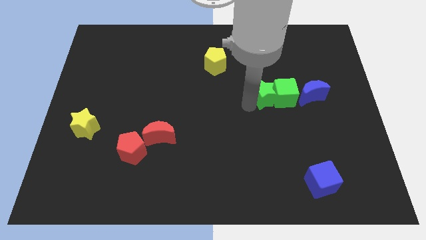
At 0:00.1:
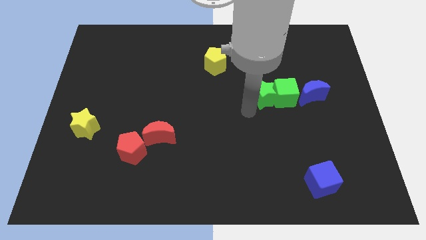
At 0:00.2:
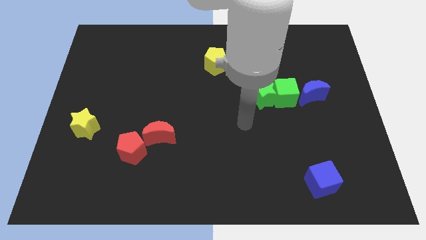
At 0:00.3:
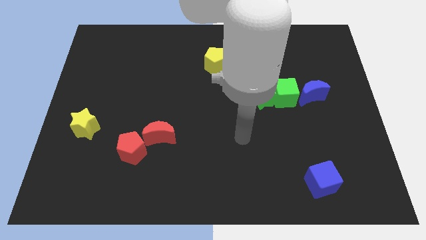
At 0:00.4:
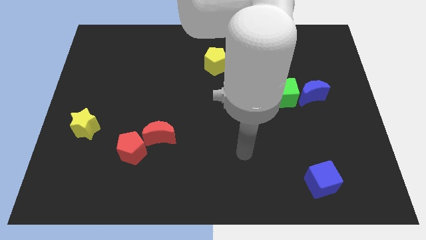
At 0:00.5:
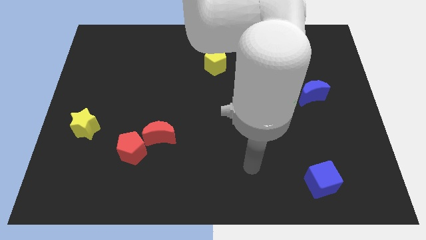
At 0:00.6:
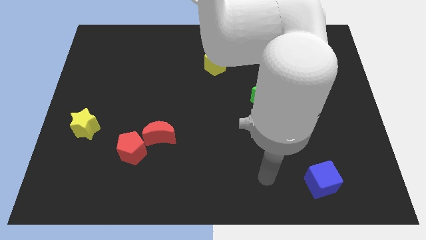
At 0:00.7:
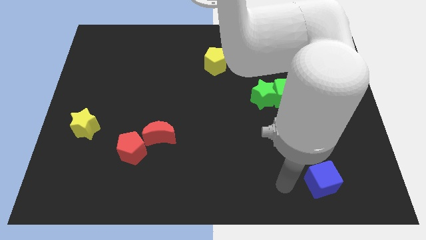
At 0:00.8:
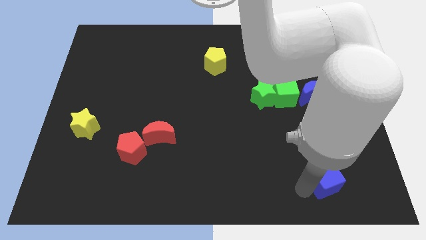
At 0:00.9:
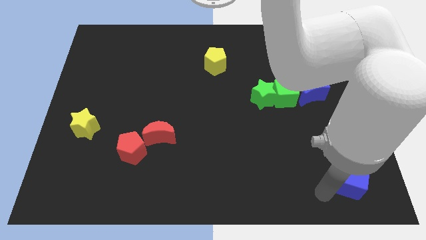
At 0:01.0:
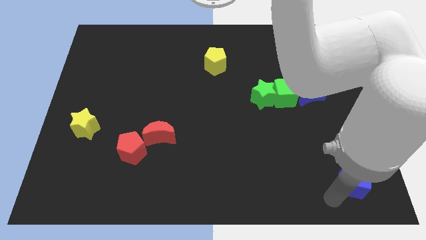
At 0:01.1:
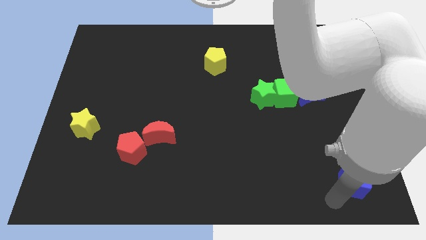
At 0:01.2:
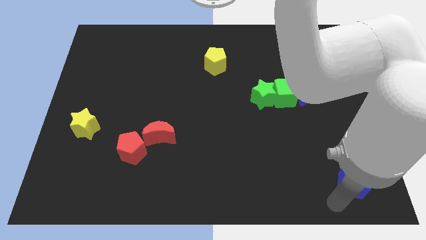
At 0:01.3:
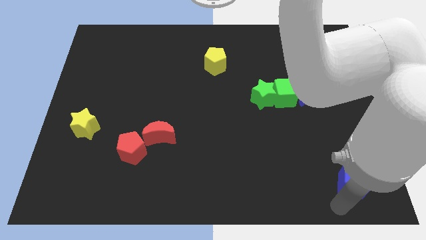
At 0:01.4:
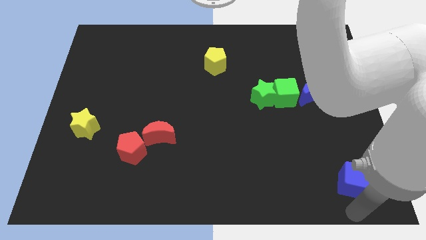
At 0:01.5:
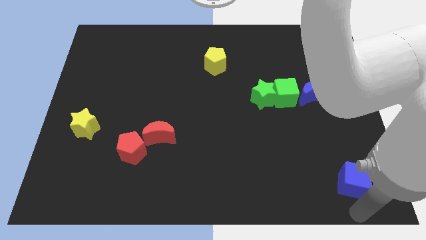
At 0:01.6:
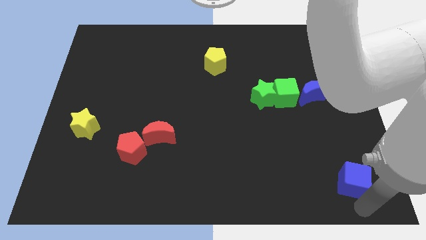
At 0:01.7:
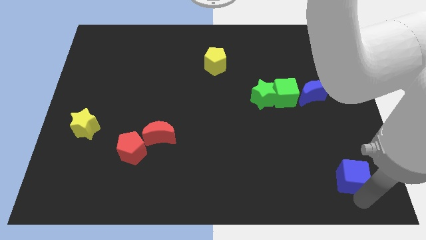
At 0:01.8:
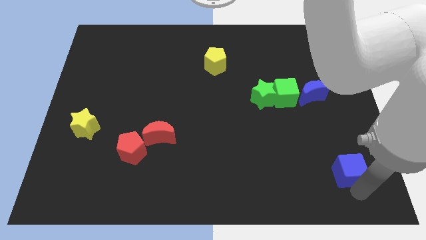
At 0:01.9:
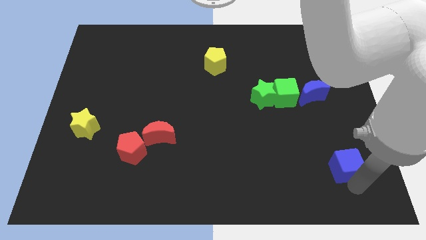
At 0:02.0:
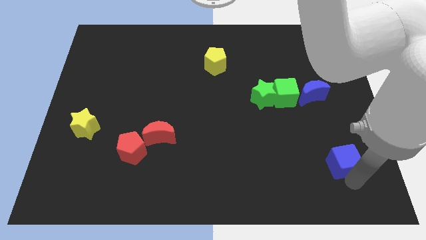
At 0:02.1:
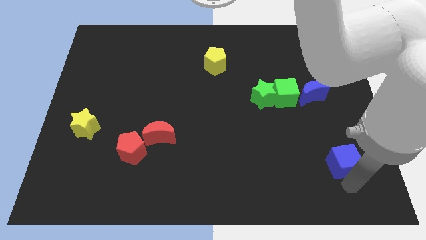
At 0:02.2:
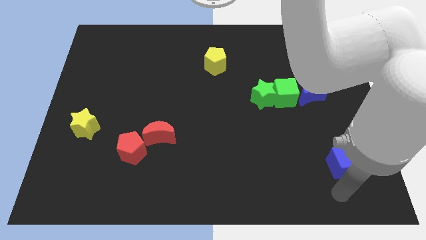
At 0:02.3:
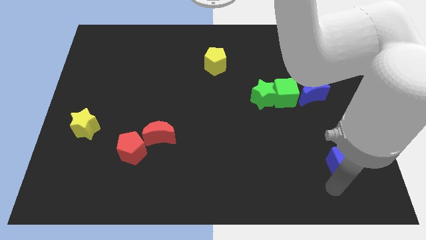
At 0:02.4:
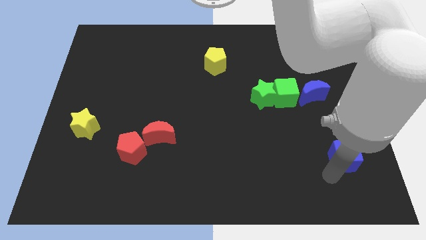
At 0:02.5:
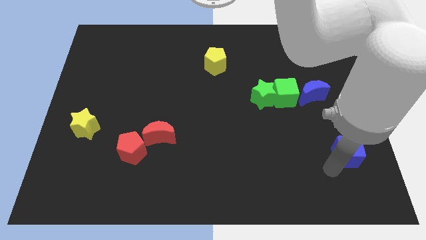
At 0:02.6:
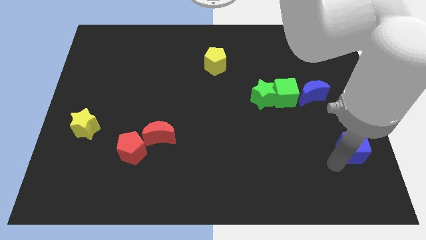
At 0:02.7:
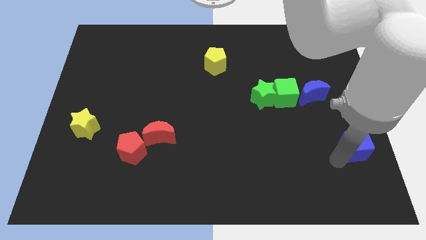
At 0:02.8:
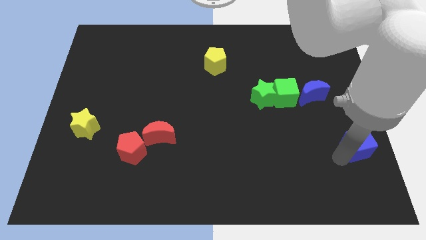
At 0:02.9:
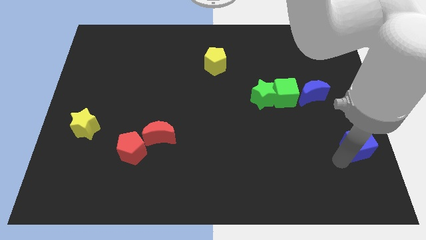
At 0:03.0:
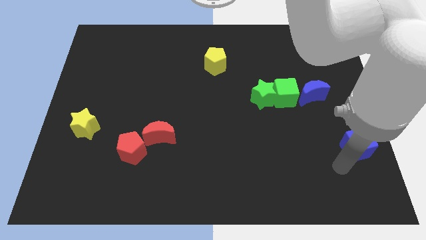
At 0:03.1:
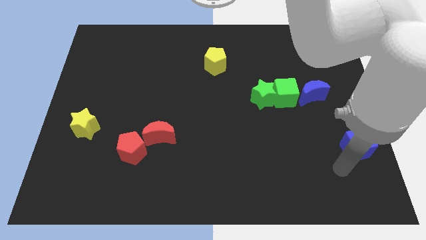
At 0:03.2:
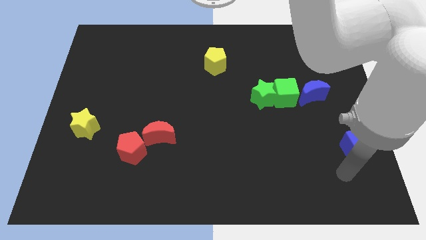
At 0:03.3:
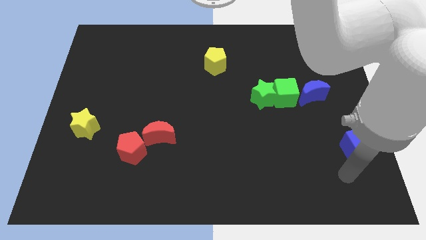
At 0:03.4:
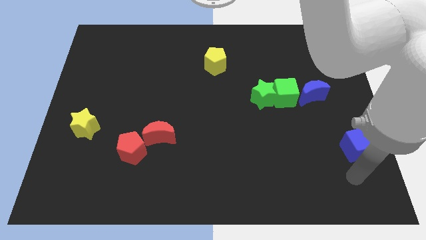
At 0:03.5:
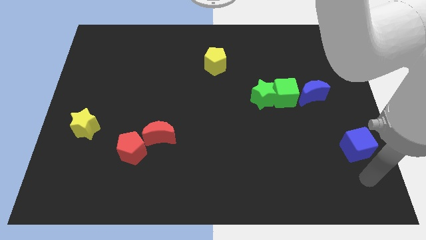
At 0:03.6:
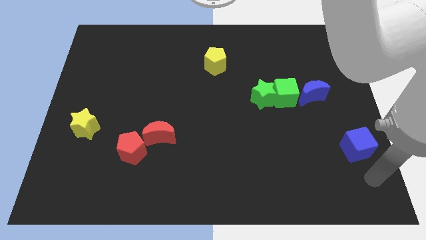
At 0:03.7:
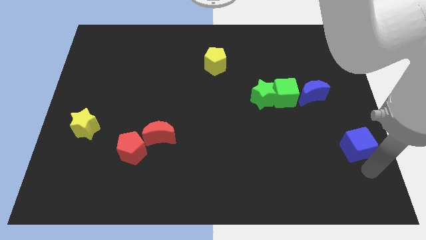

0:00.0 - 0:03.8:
move the blue cube towards the center right

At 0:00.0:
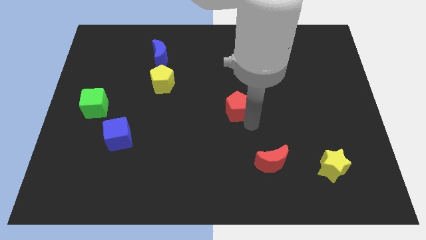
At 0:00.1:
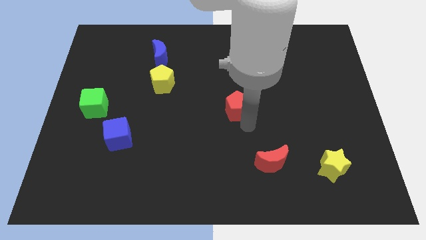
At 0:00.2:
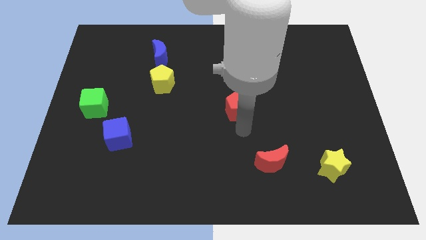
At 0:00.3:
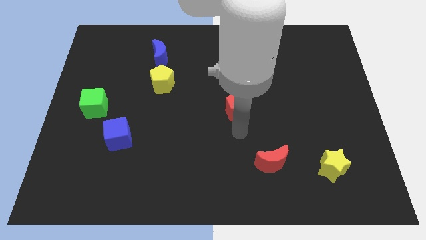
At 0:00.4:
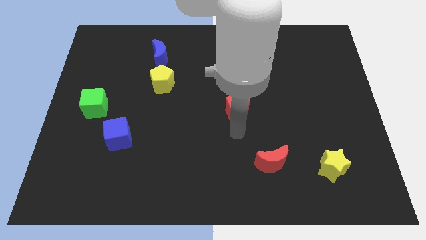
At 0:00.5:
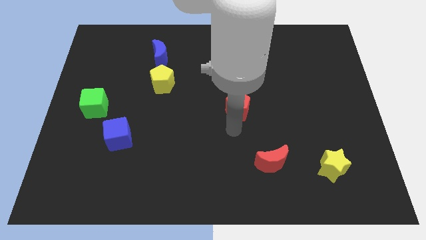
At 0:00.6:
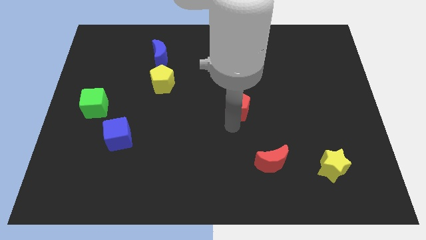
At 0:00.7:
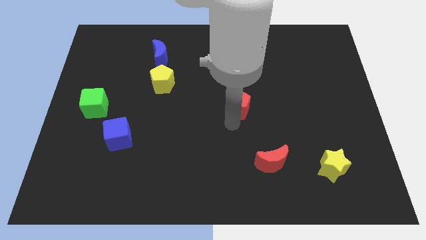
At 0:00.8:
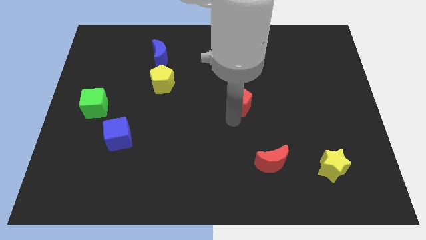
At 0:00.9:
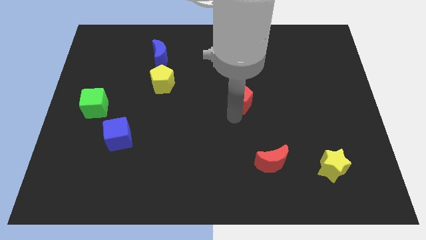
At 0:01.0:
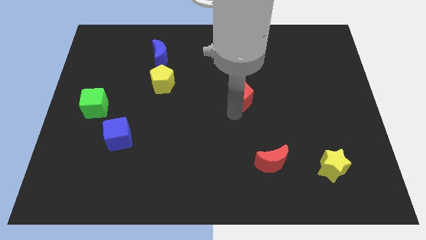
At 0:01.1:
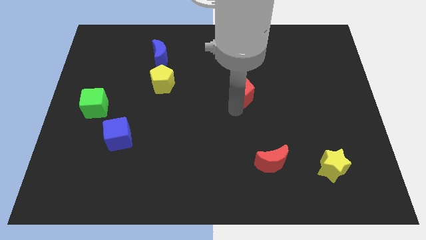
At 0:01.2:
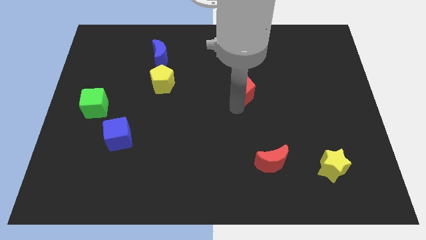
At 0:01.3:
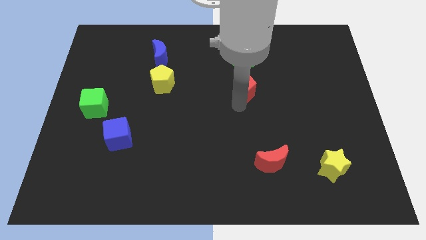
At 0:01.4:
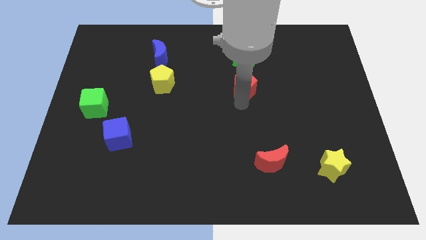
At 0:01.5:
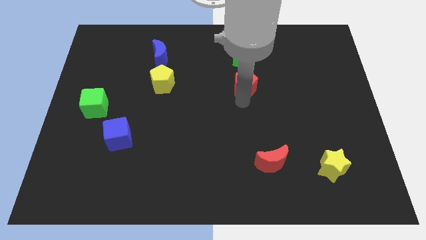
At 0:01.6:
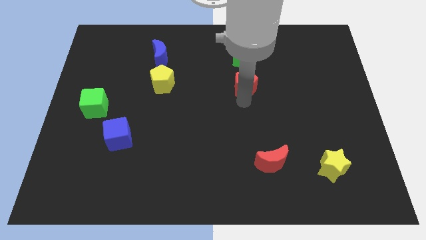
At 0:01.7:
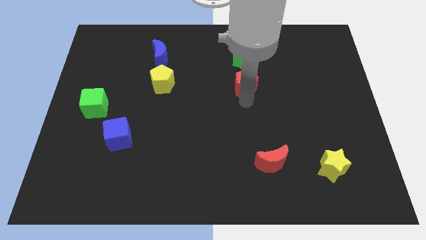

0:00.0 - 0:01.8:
move red pentagon towards the green star

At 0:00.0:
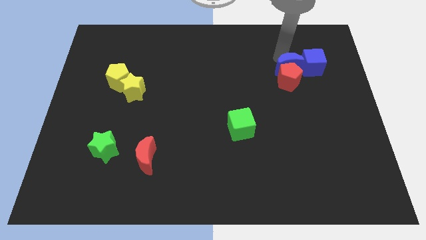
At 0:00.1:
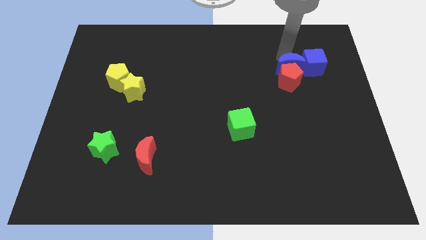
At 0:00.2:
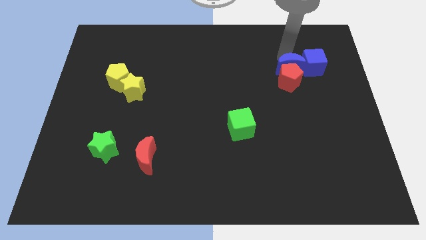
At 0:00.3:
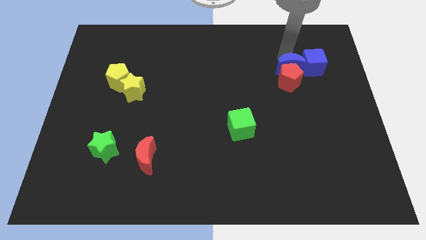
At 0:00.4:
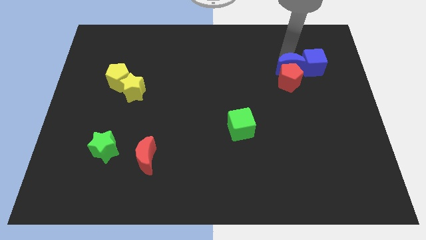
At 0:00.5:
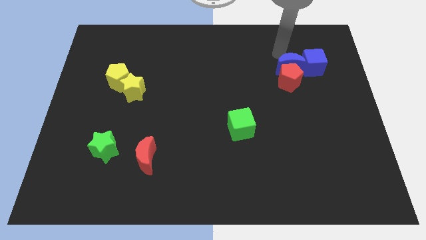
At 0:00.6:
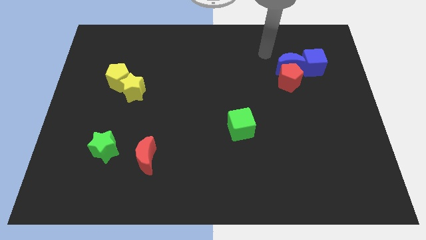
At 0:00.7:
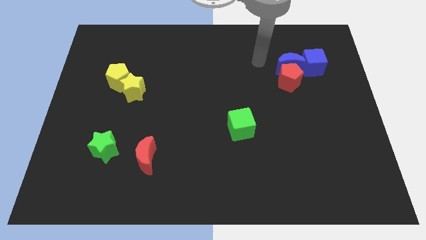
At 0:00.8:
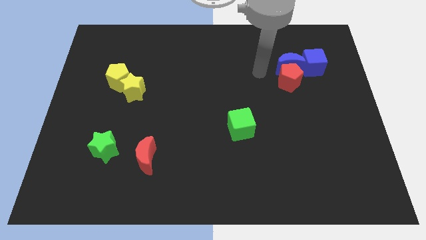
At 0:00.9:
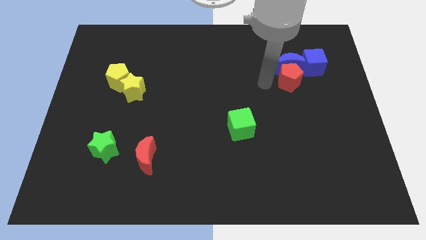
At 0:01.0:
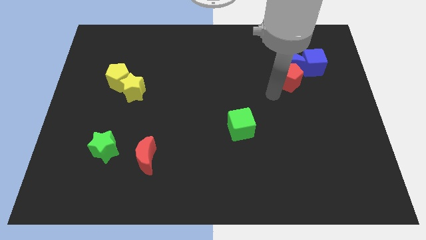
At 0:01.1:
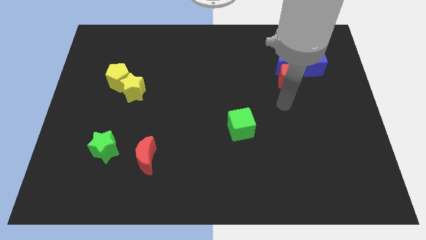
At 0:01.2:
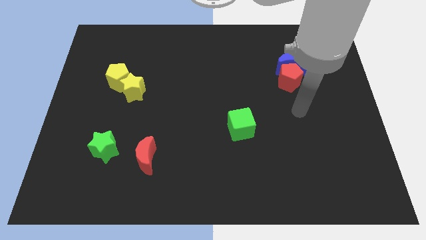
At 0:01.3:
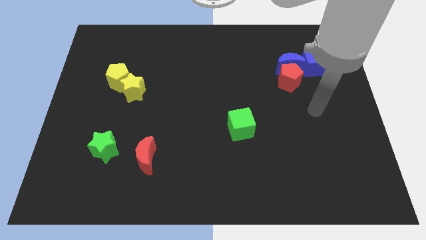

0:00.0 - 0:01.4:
point your arm at the bottom of the red pentagon

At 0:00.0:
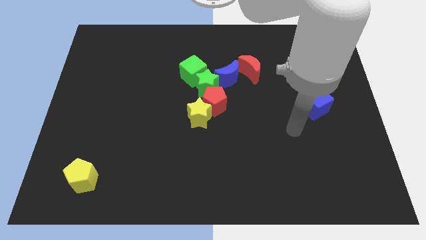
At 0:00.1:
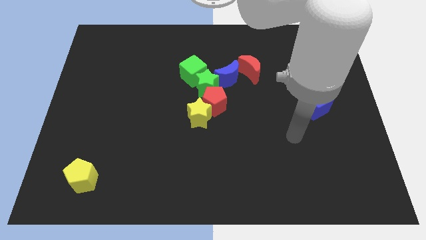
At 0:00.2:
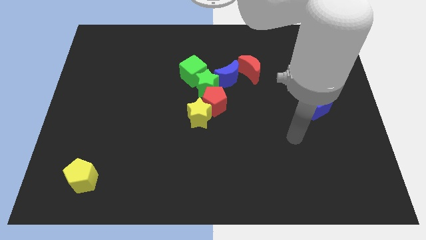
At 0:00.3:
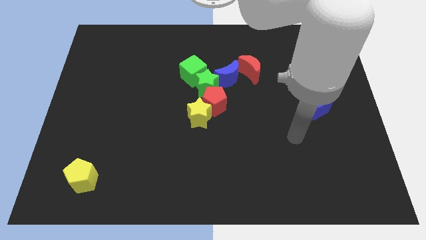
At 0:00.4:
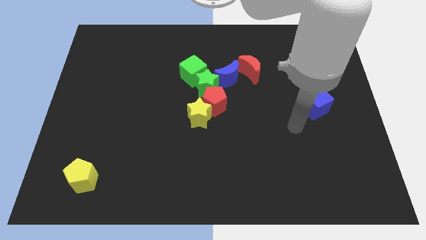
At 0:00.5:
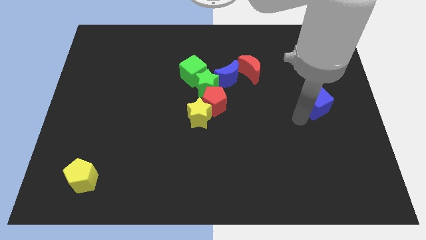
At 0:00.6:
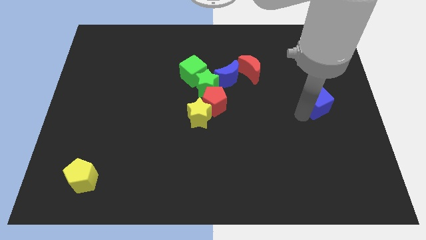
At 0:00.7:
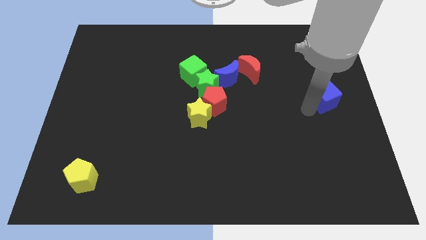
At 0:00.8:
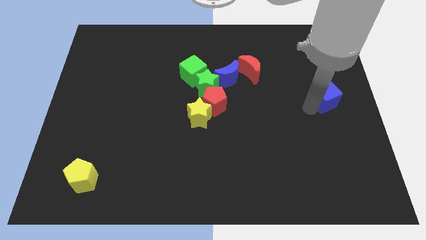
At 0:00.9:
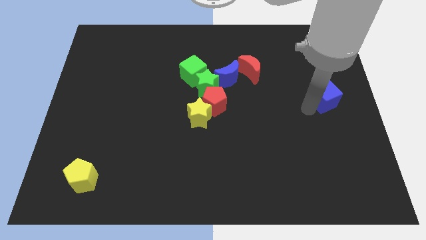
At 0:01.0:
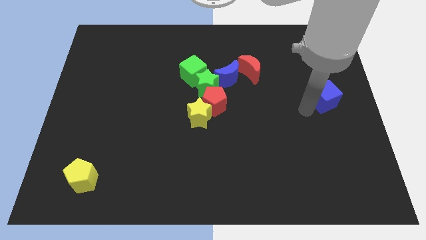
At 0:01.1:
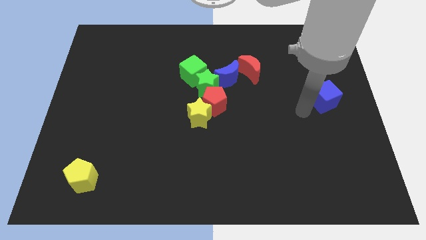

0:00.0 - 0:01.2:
slightly push the blue cube to the right side of the board

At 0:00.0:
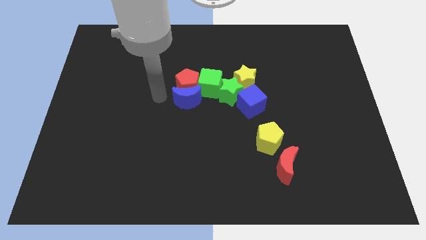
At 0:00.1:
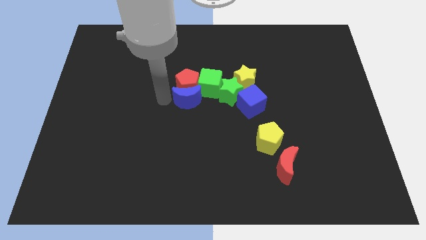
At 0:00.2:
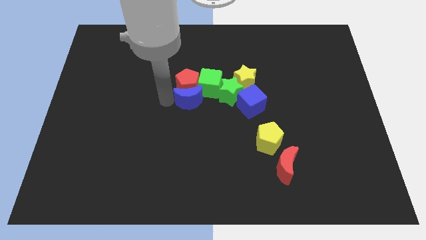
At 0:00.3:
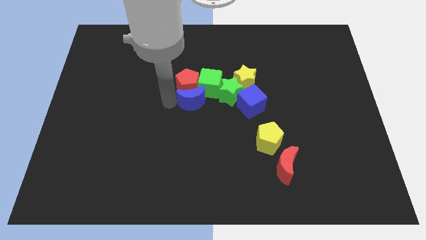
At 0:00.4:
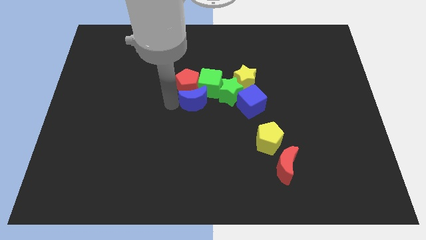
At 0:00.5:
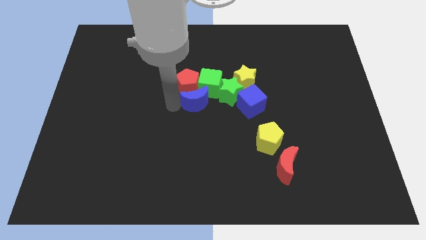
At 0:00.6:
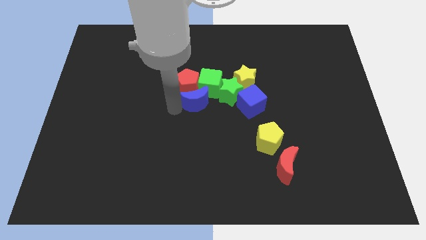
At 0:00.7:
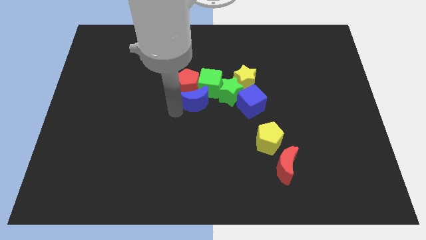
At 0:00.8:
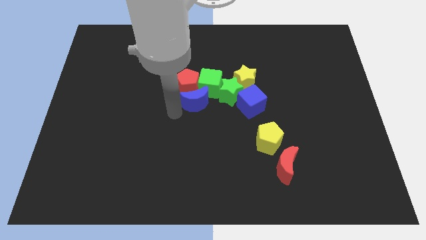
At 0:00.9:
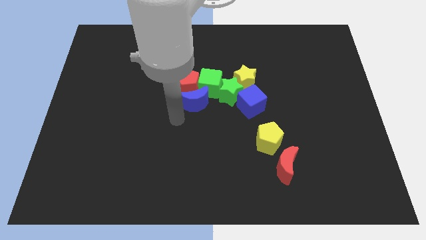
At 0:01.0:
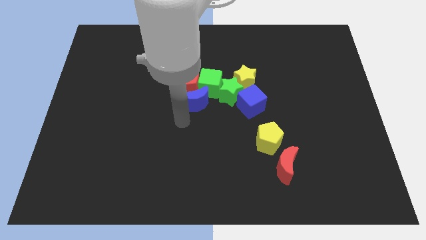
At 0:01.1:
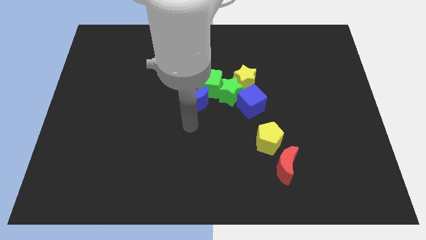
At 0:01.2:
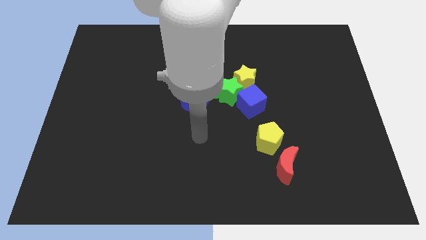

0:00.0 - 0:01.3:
push the blue cube below the red pentagon and the green cube
